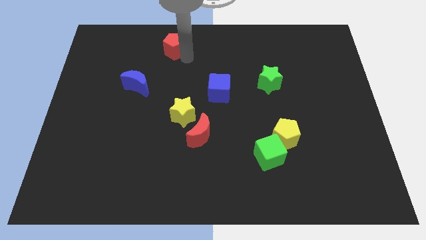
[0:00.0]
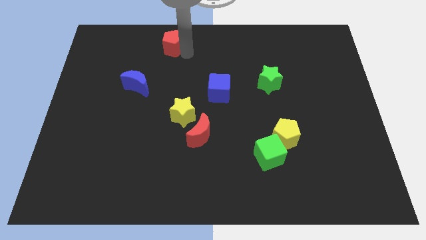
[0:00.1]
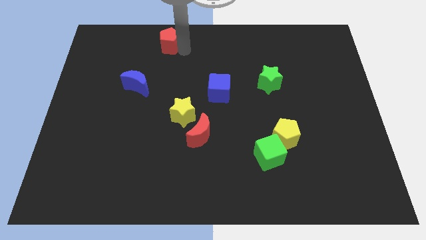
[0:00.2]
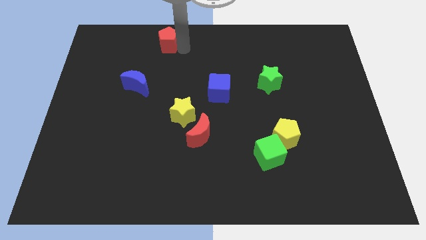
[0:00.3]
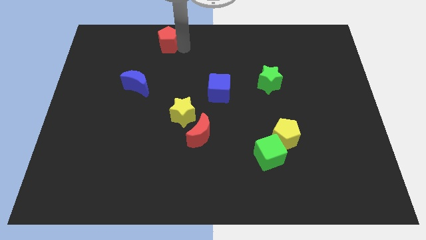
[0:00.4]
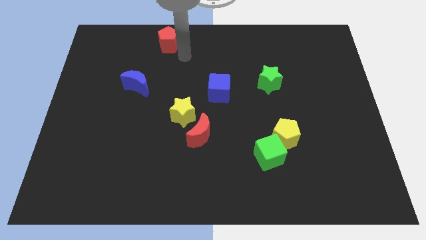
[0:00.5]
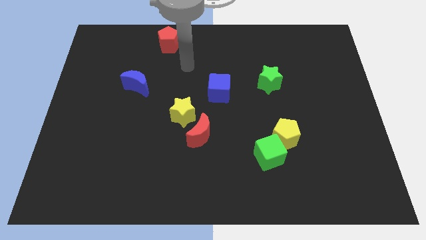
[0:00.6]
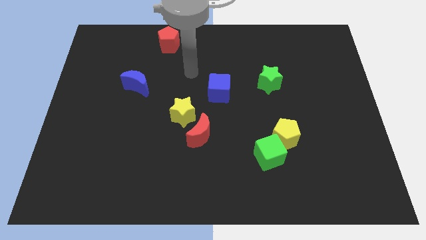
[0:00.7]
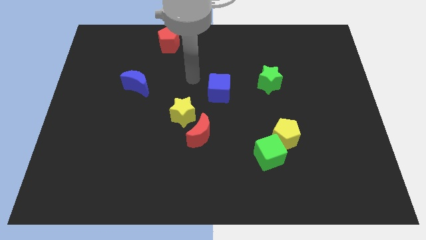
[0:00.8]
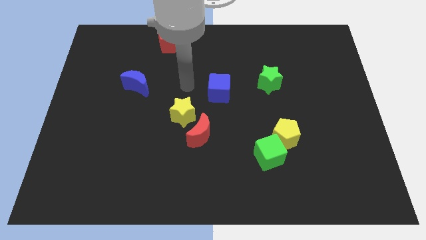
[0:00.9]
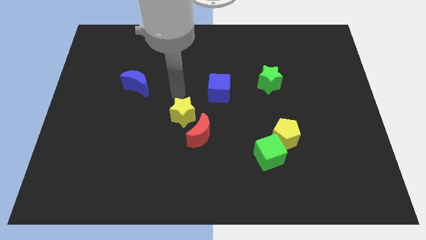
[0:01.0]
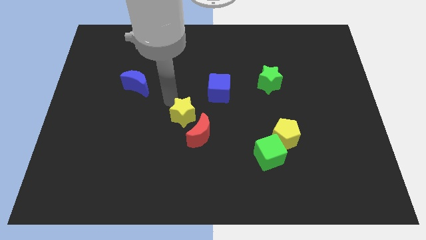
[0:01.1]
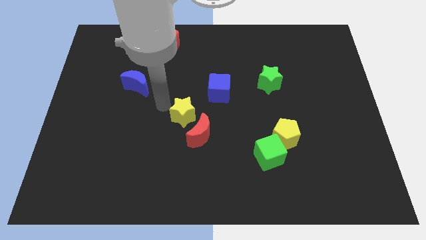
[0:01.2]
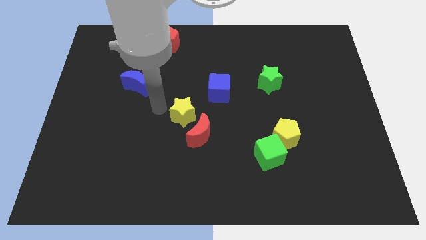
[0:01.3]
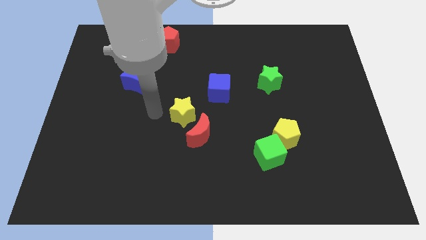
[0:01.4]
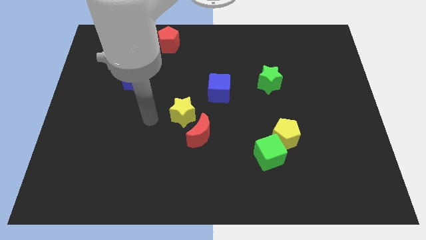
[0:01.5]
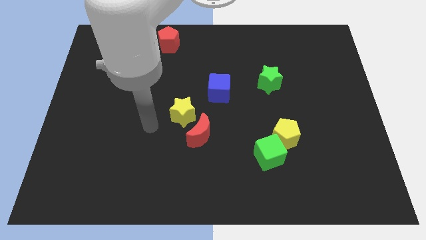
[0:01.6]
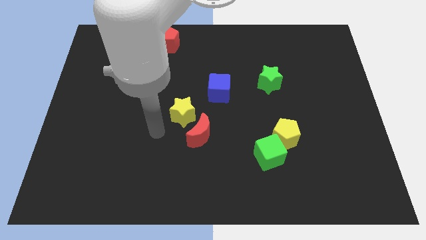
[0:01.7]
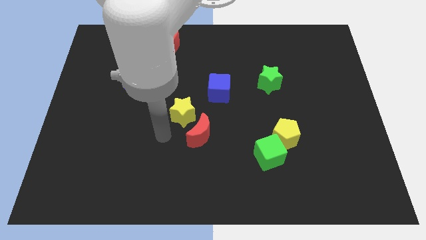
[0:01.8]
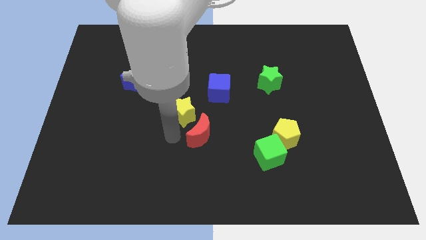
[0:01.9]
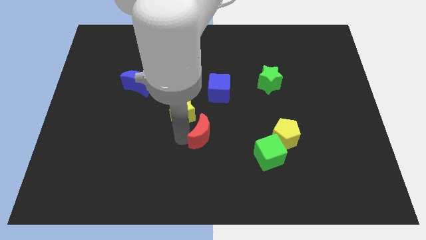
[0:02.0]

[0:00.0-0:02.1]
tap the red moon on bottom

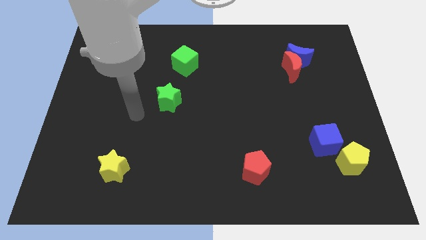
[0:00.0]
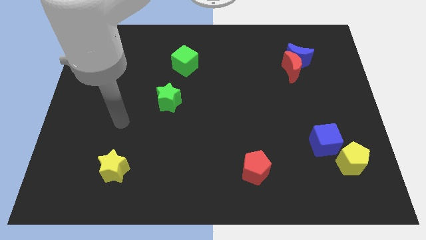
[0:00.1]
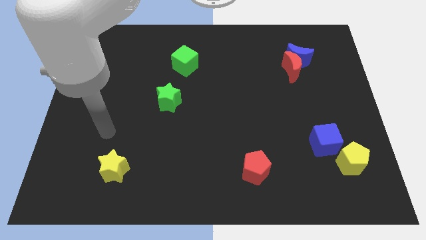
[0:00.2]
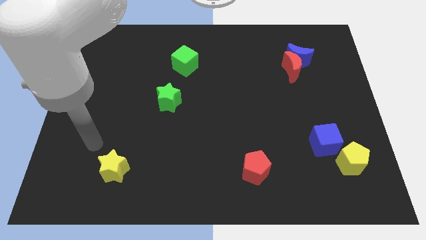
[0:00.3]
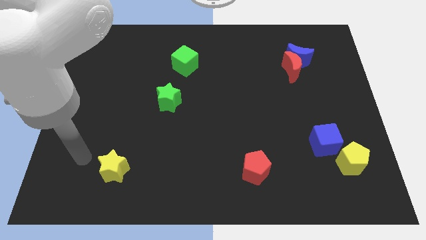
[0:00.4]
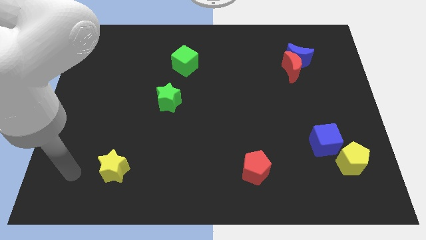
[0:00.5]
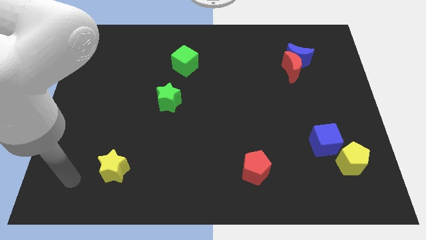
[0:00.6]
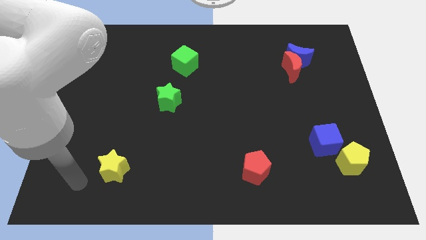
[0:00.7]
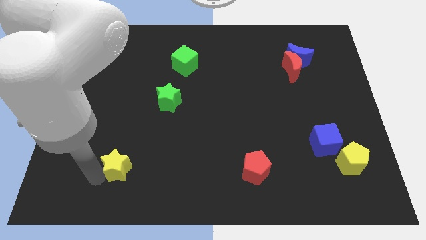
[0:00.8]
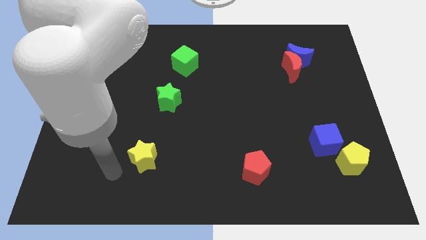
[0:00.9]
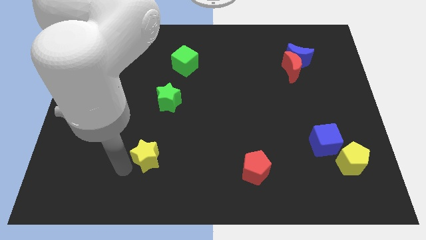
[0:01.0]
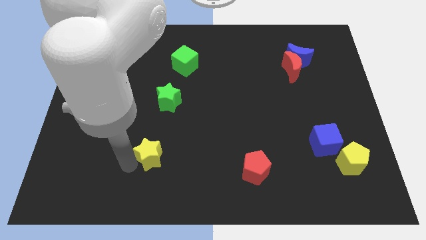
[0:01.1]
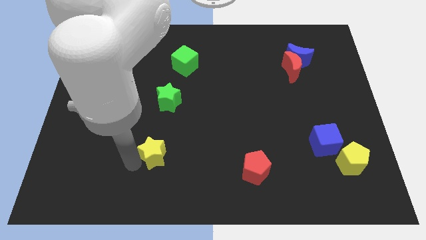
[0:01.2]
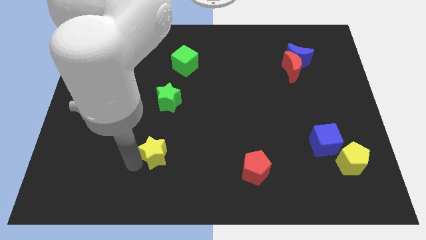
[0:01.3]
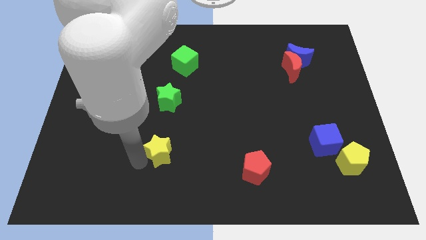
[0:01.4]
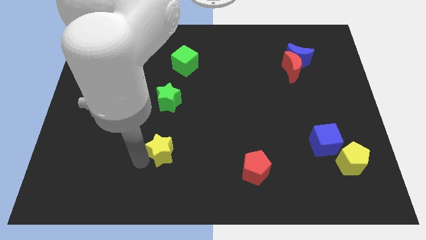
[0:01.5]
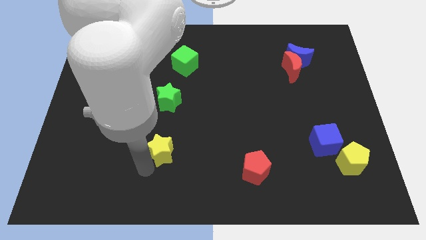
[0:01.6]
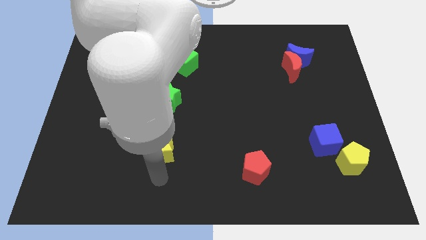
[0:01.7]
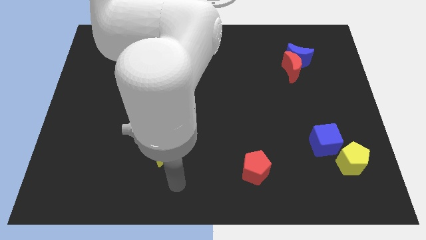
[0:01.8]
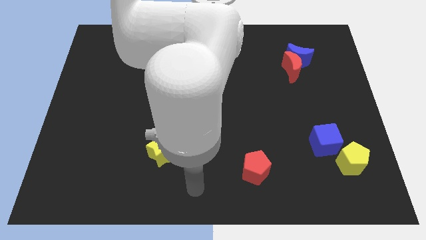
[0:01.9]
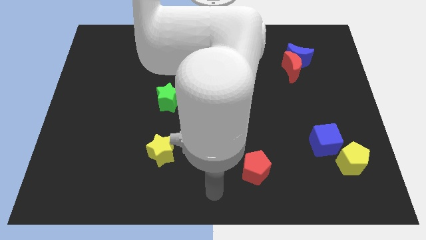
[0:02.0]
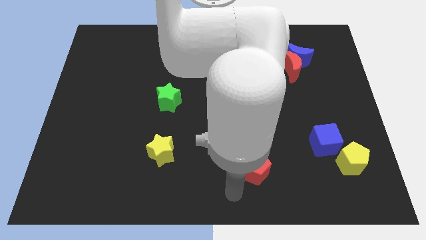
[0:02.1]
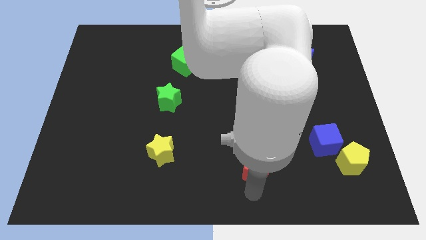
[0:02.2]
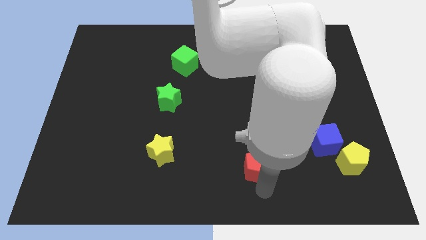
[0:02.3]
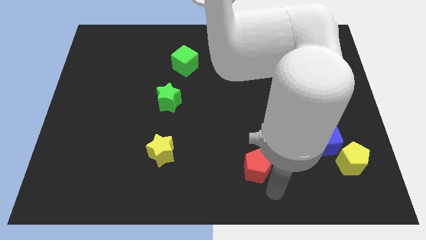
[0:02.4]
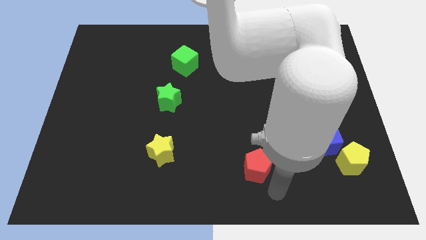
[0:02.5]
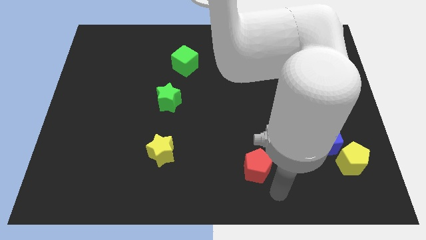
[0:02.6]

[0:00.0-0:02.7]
place yellow star down to the green star

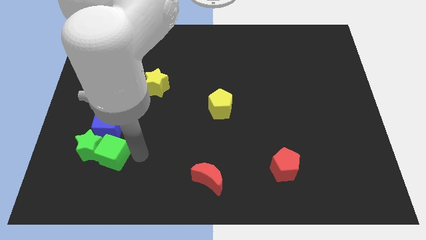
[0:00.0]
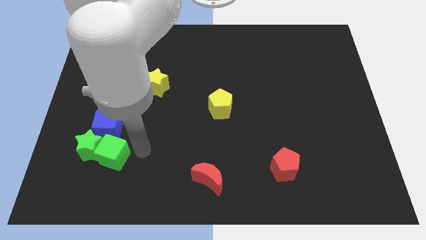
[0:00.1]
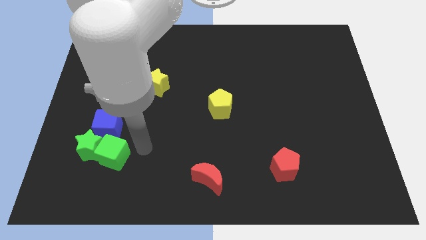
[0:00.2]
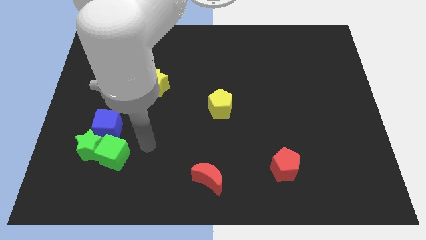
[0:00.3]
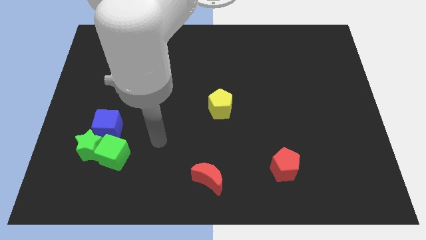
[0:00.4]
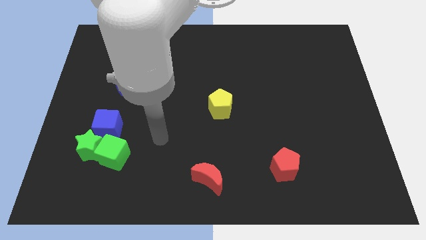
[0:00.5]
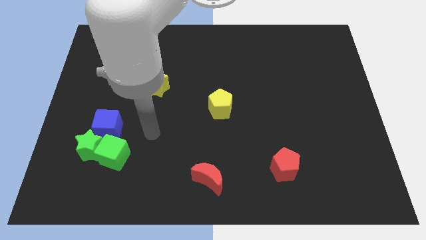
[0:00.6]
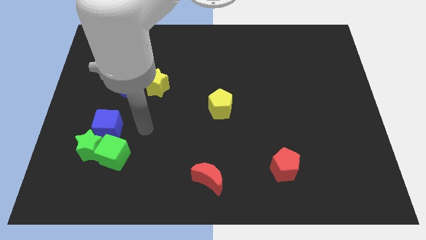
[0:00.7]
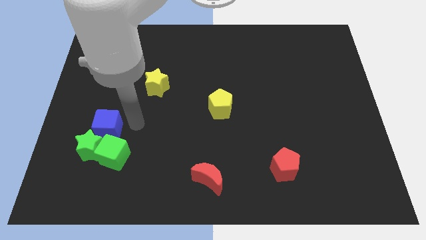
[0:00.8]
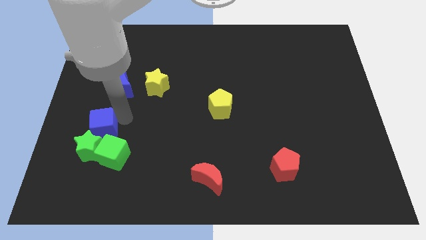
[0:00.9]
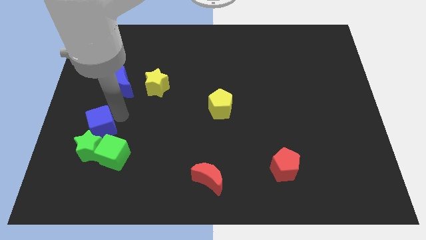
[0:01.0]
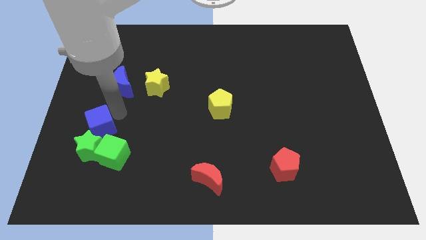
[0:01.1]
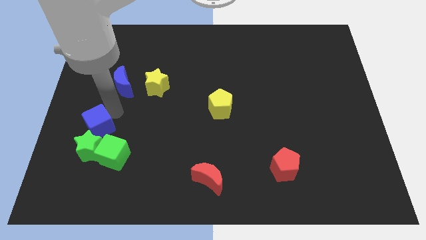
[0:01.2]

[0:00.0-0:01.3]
move the arm in between the blue blocks

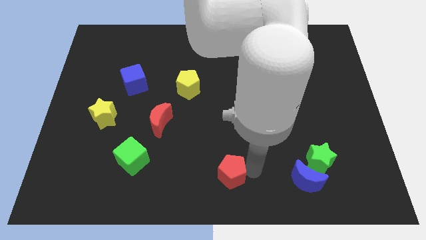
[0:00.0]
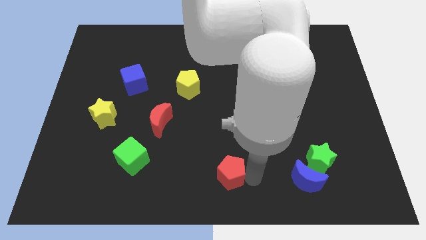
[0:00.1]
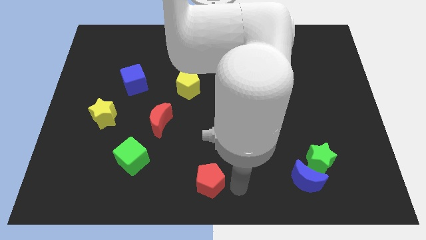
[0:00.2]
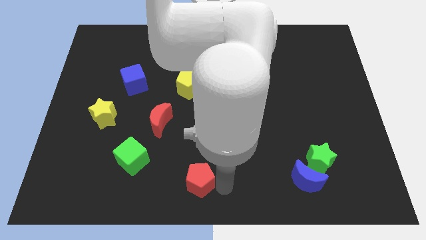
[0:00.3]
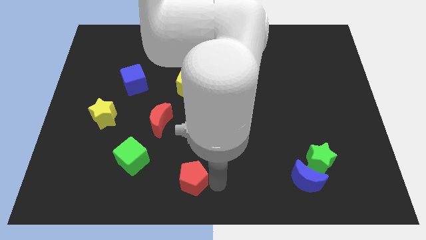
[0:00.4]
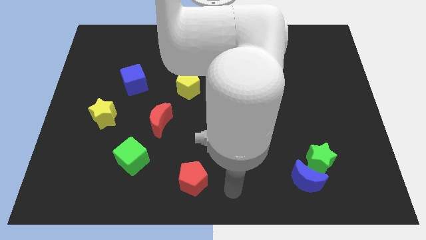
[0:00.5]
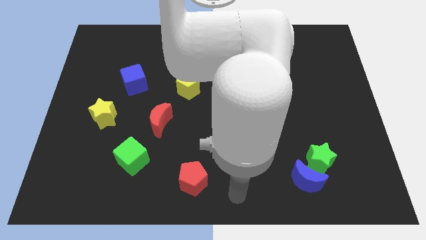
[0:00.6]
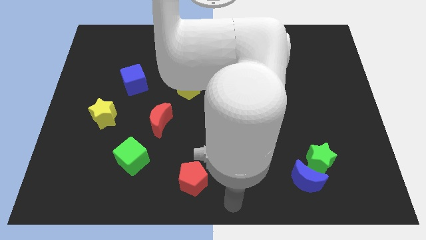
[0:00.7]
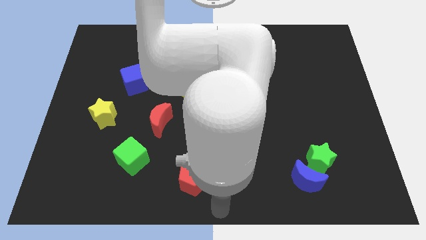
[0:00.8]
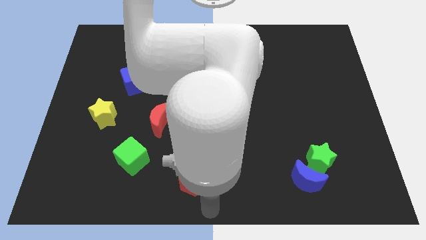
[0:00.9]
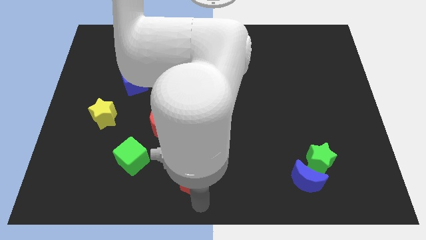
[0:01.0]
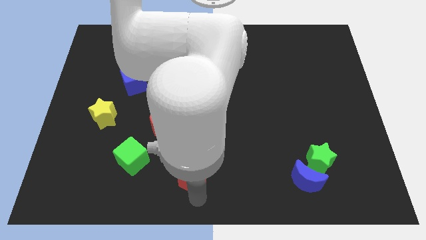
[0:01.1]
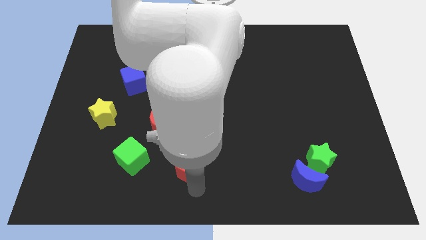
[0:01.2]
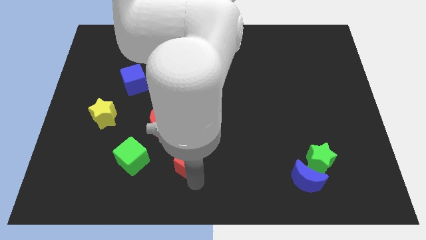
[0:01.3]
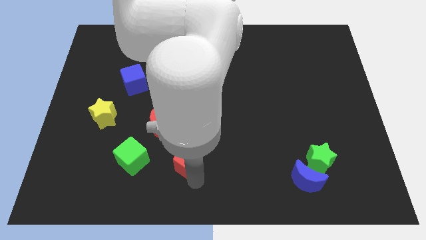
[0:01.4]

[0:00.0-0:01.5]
move the red pentagon parallel right to the green cube

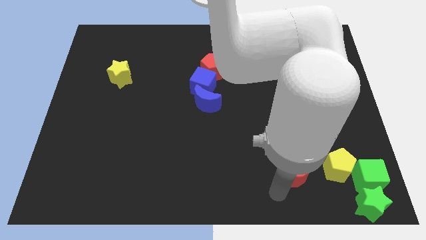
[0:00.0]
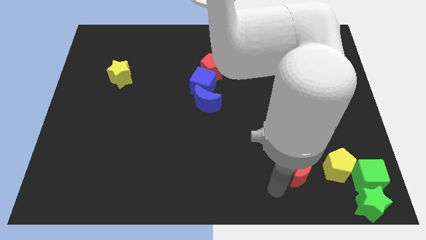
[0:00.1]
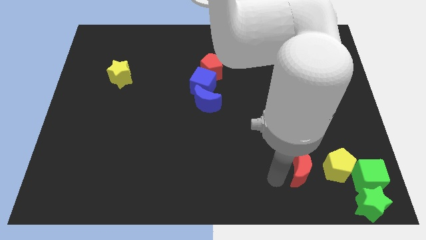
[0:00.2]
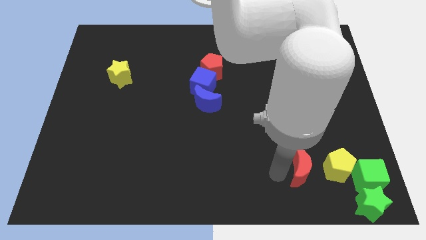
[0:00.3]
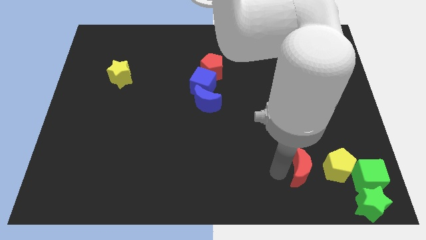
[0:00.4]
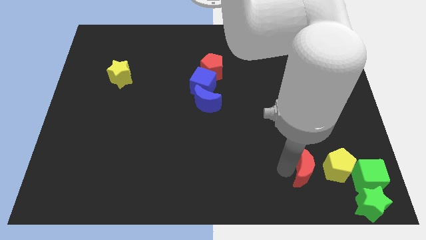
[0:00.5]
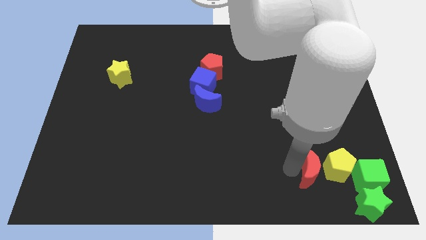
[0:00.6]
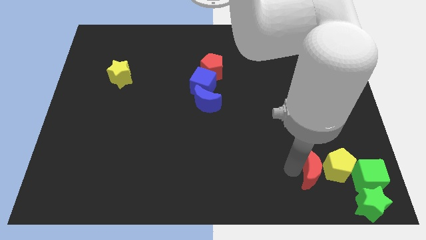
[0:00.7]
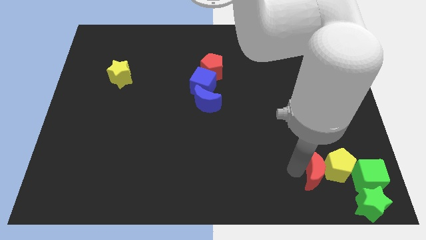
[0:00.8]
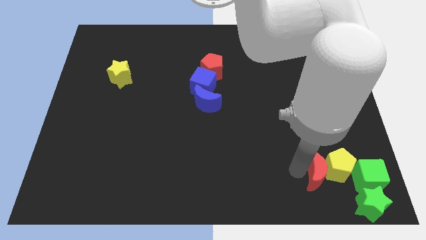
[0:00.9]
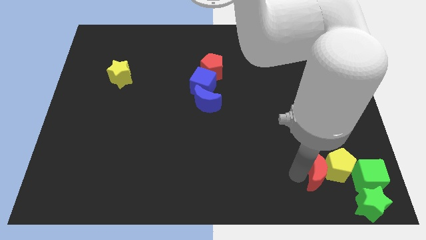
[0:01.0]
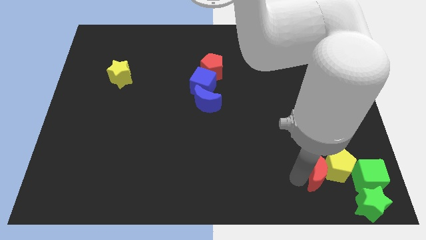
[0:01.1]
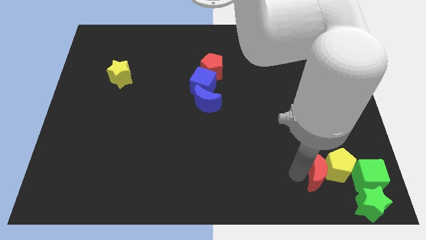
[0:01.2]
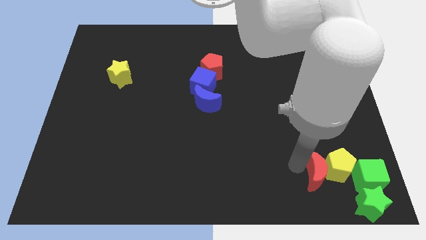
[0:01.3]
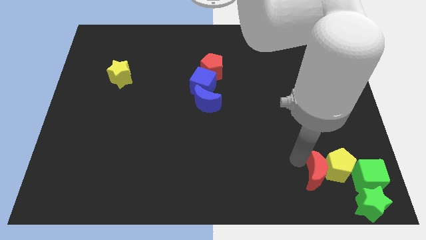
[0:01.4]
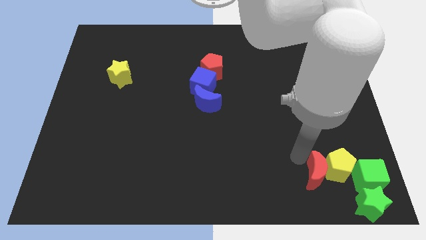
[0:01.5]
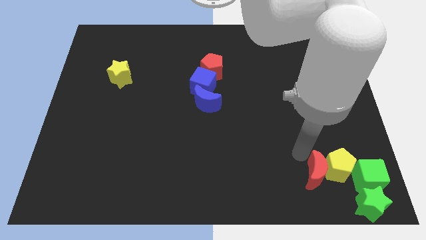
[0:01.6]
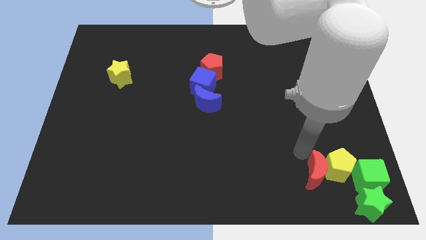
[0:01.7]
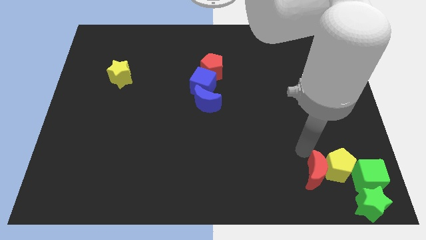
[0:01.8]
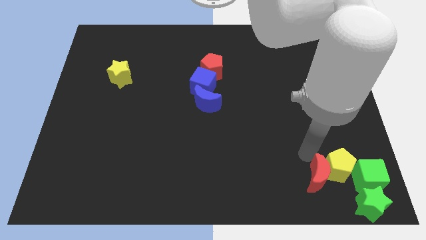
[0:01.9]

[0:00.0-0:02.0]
push red moon into the yellow pentagon
